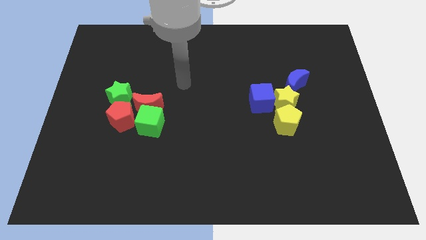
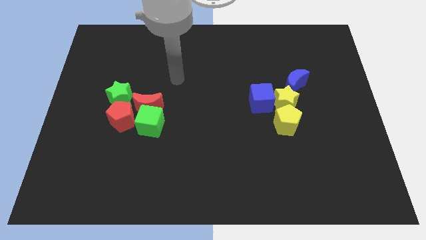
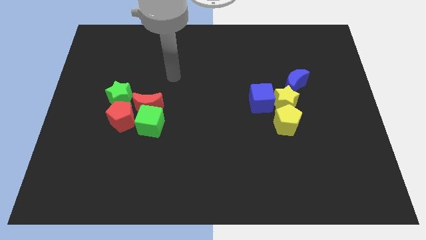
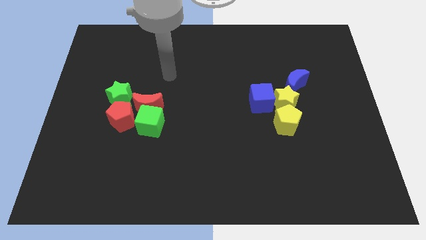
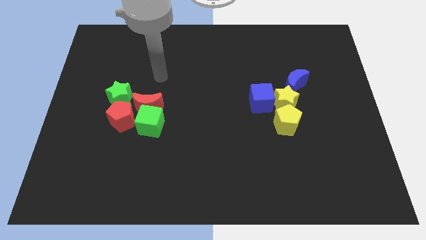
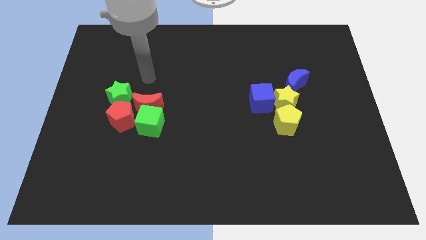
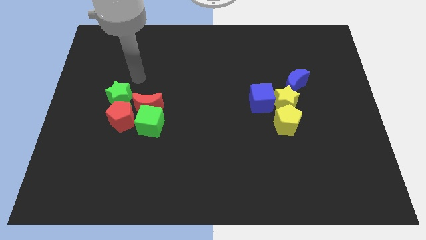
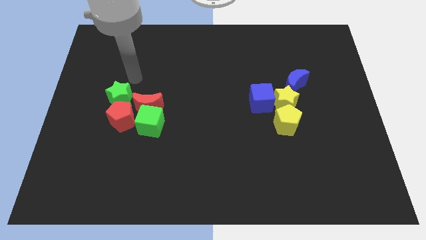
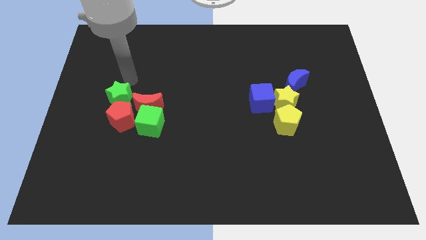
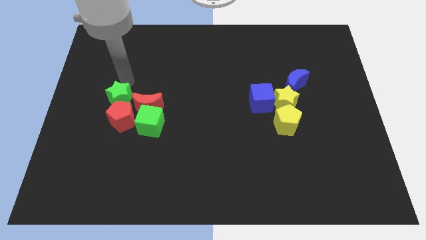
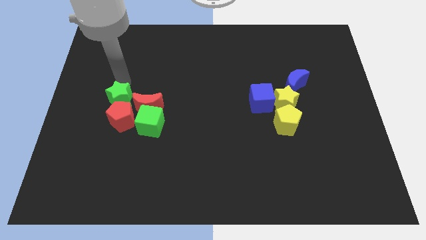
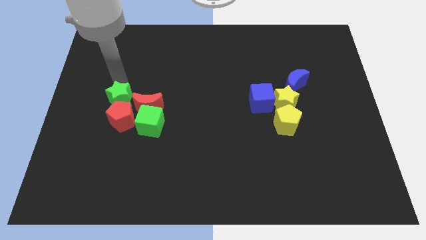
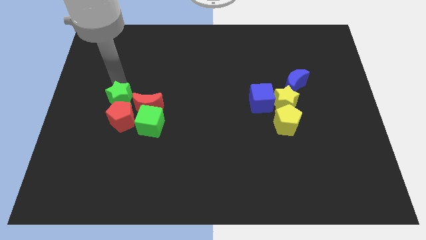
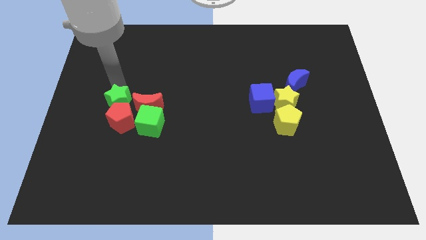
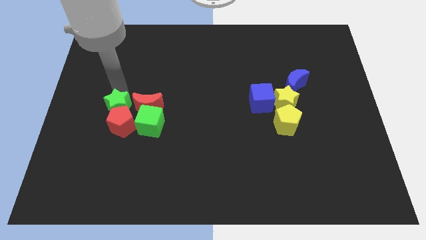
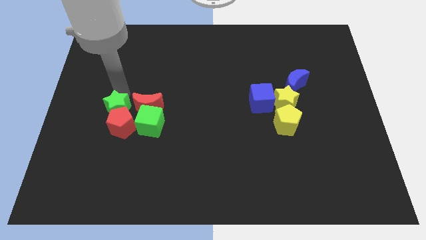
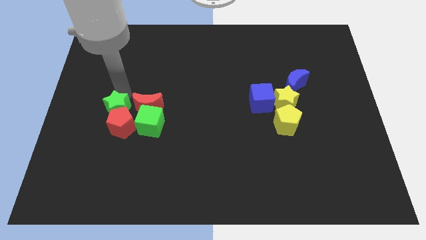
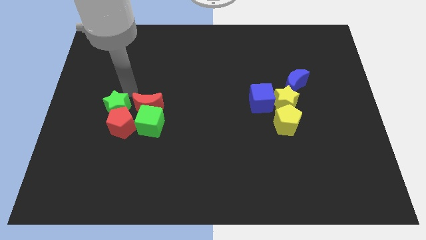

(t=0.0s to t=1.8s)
push the green star into the red pentagon

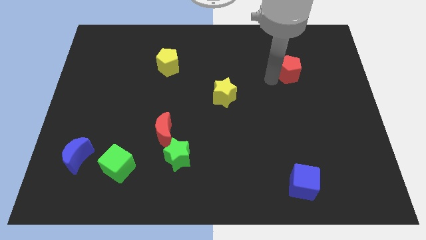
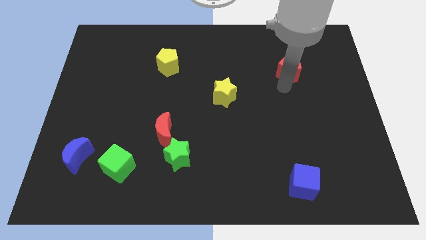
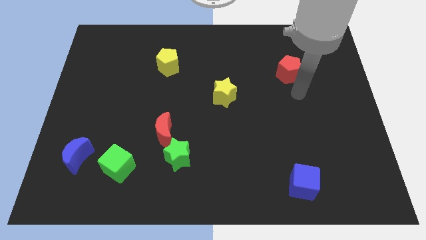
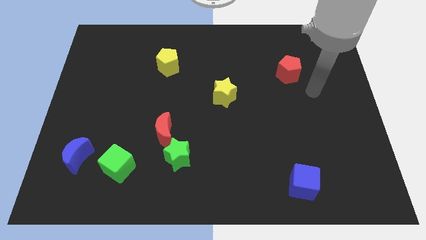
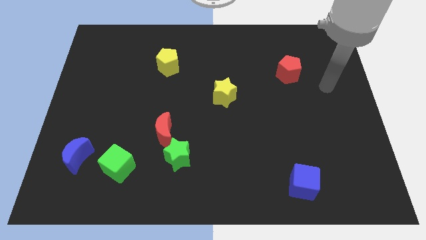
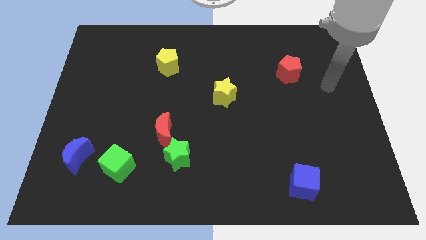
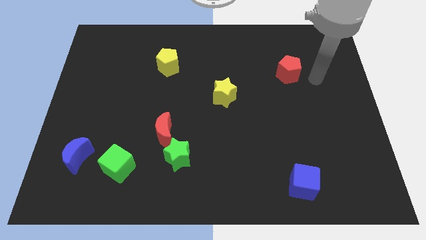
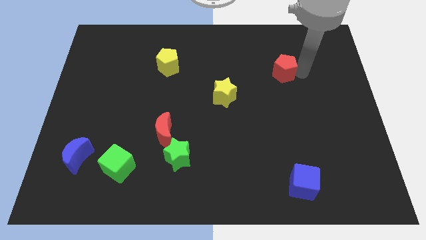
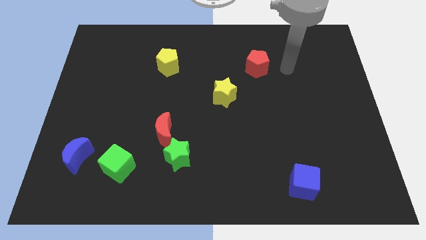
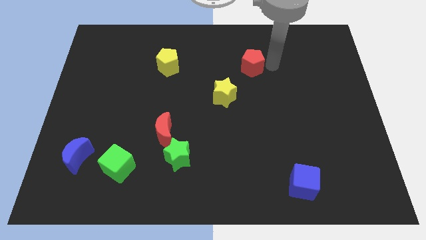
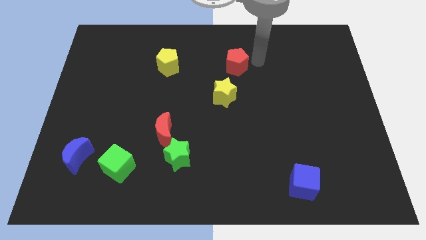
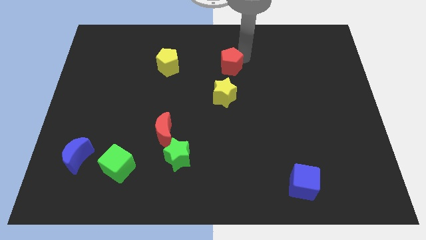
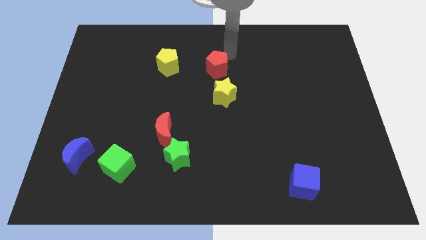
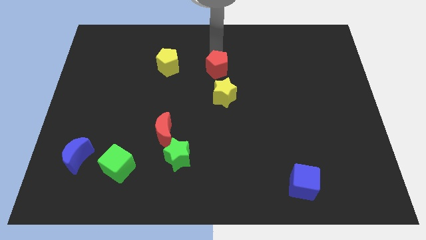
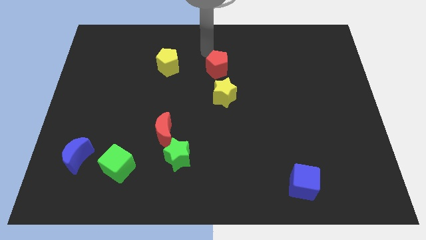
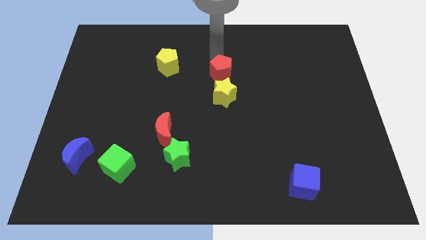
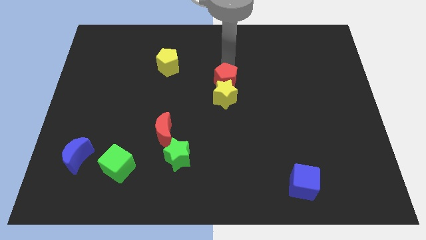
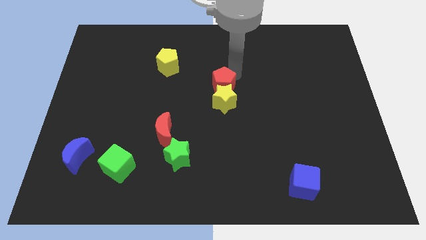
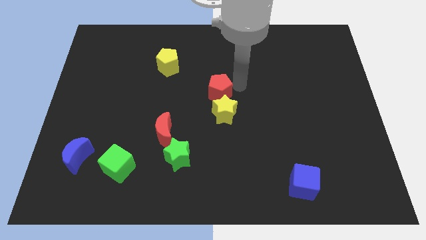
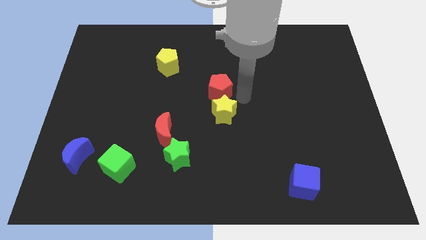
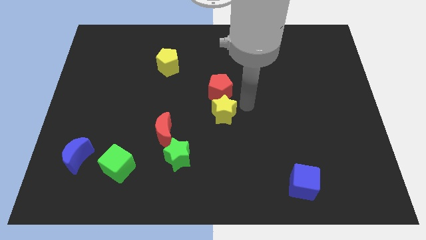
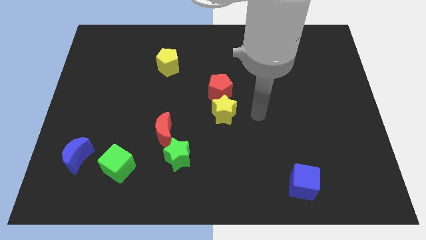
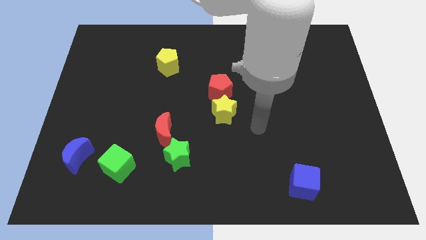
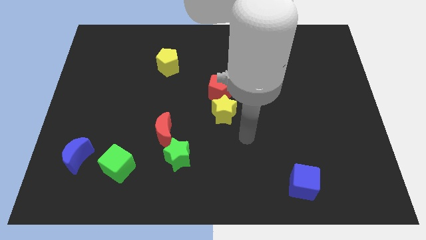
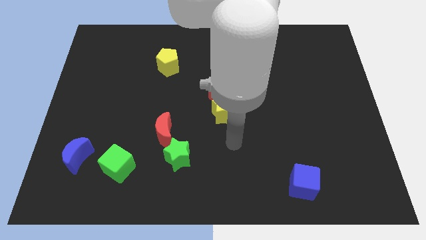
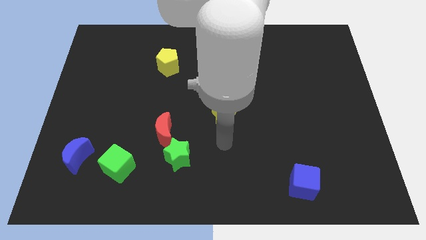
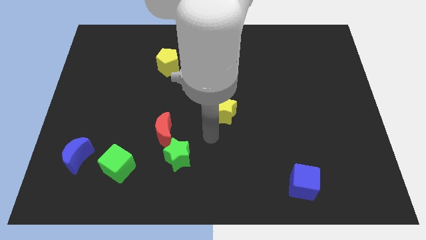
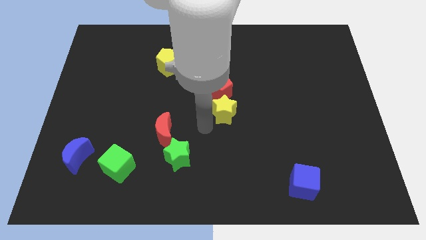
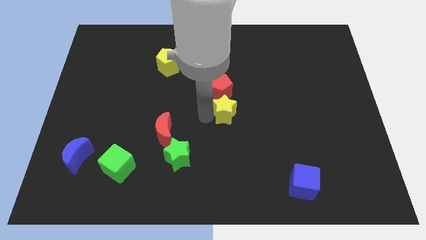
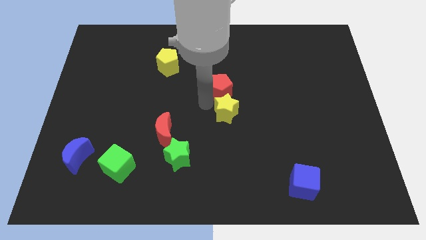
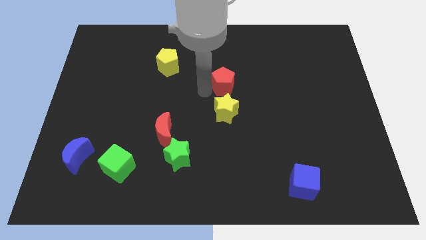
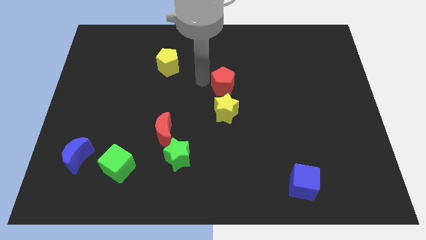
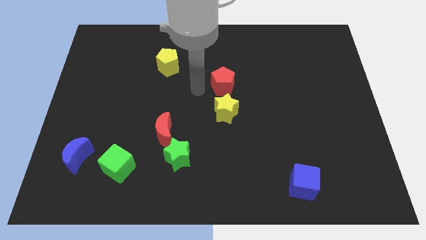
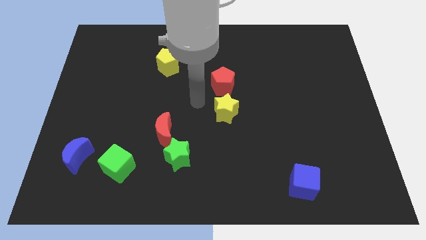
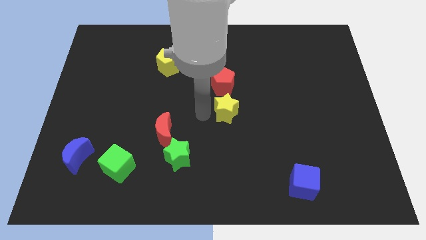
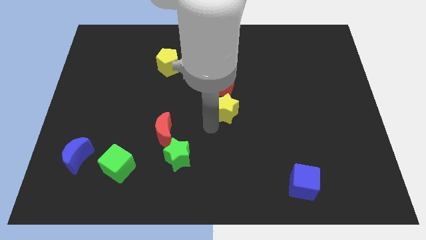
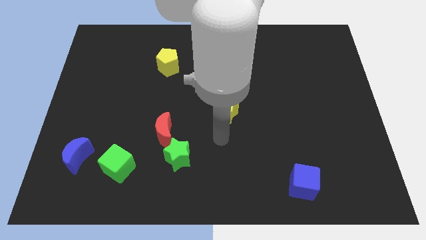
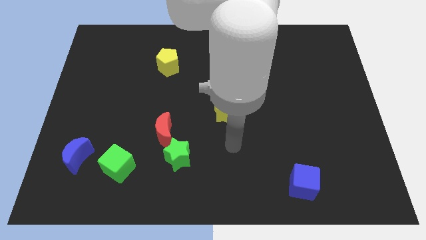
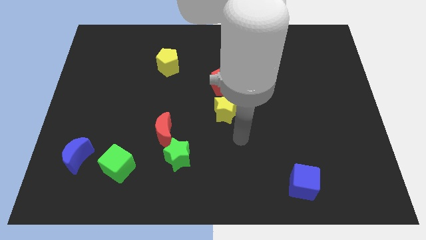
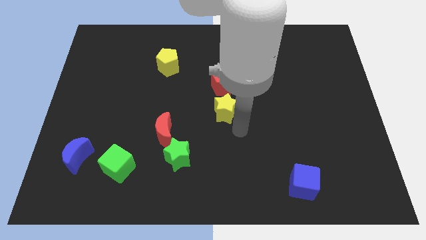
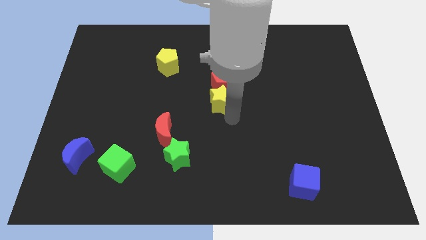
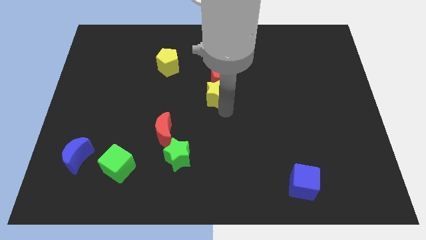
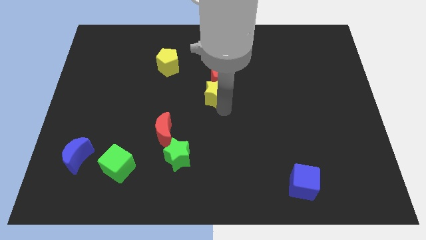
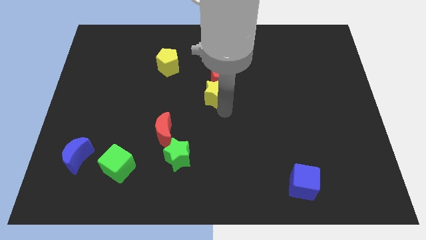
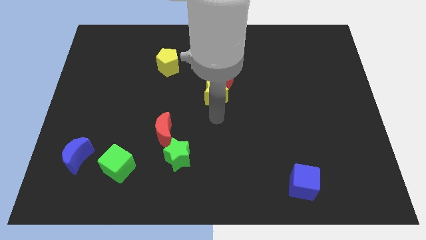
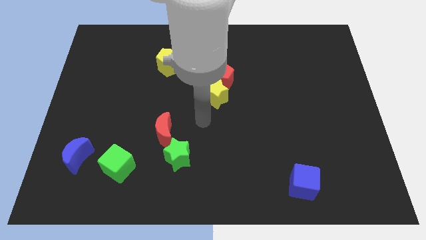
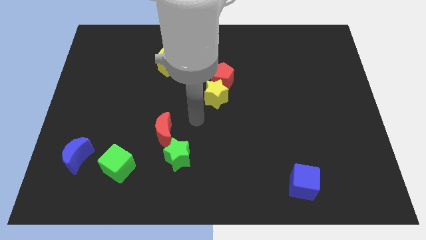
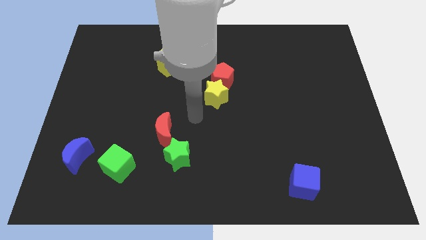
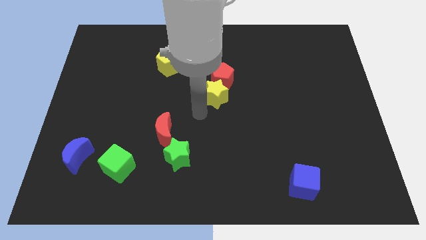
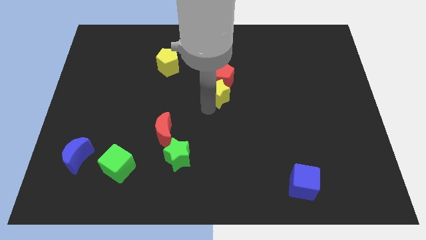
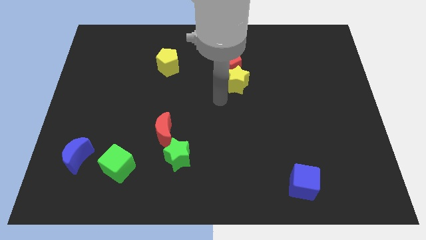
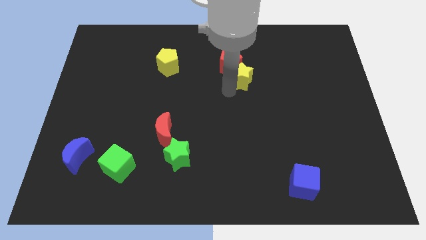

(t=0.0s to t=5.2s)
place the red pentagon right to the yellow pentagon

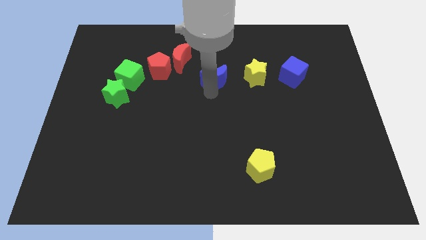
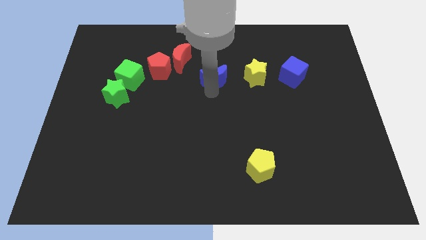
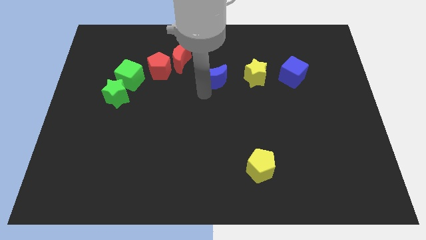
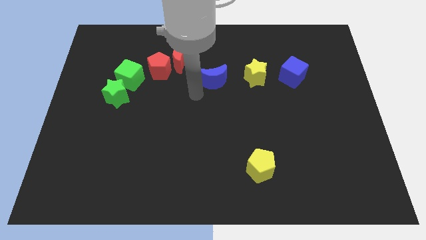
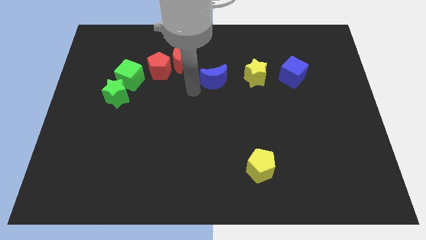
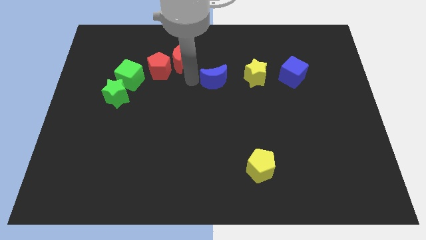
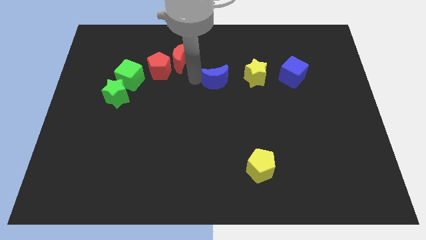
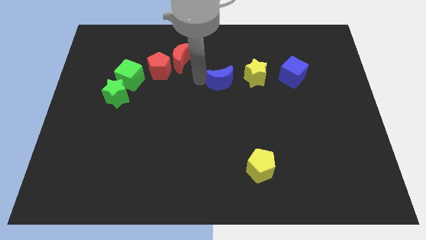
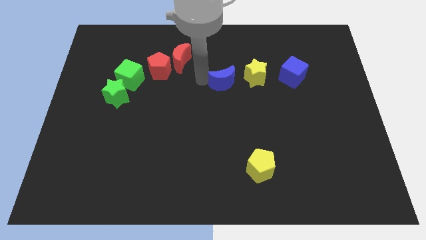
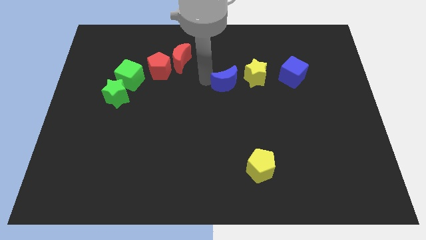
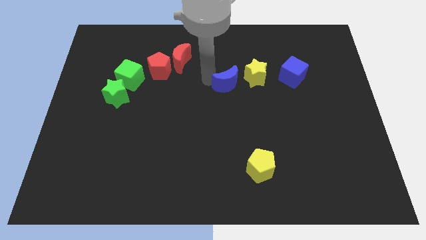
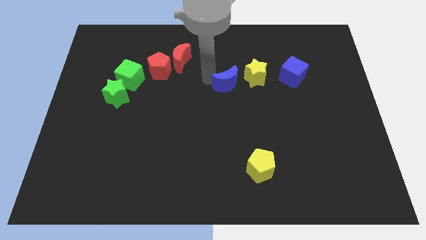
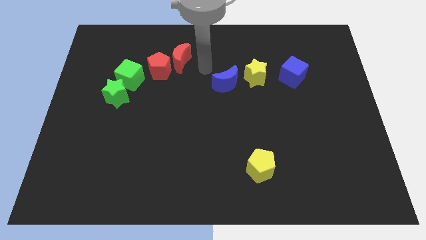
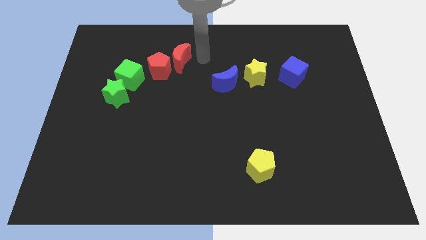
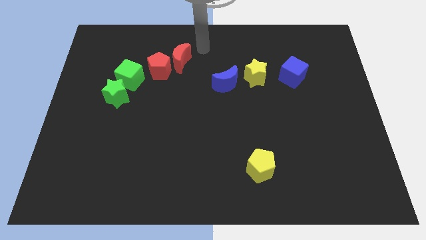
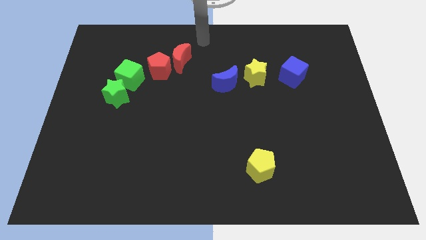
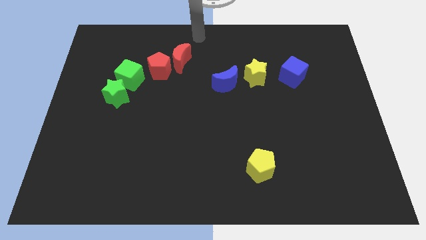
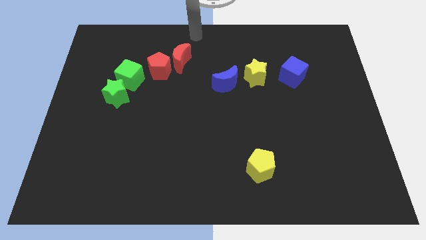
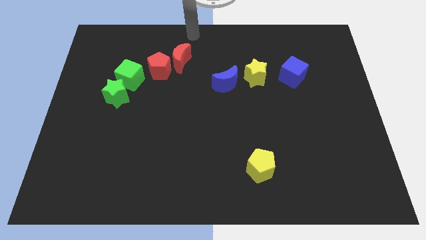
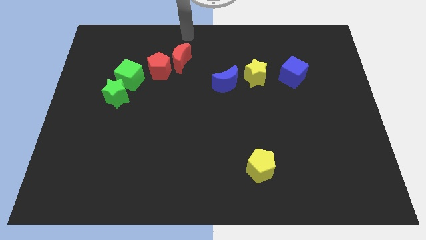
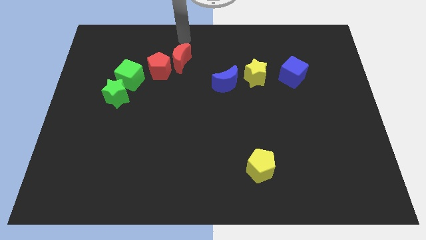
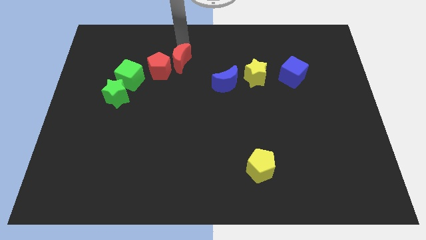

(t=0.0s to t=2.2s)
push blue moon towards yellow star
